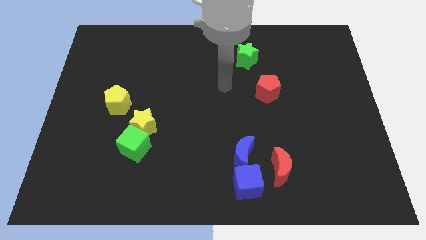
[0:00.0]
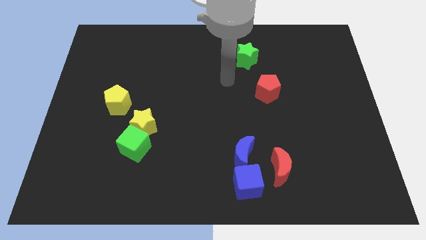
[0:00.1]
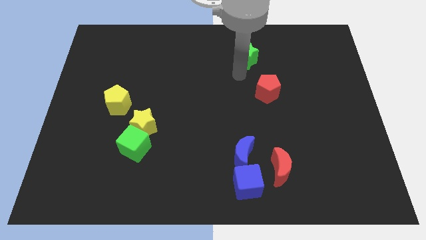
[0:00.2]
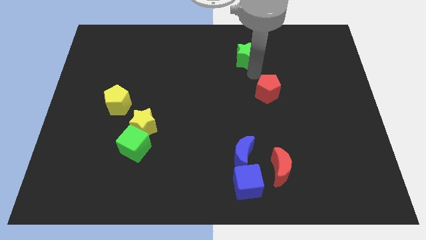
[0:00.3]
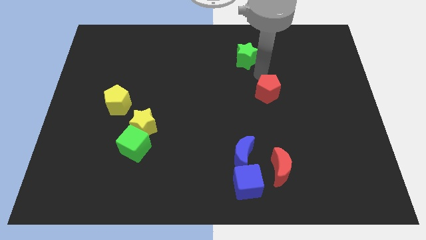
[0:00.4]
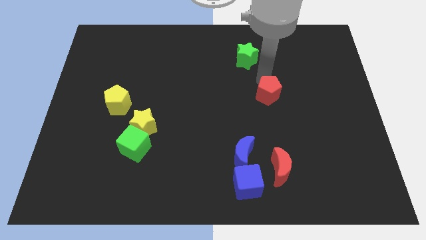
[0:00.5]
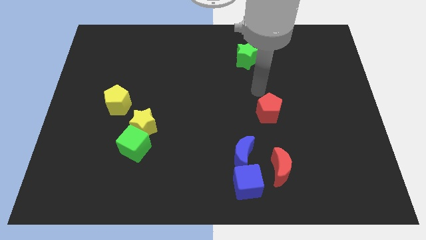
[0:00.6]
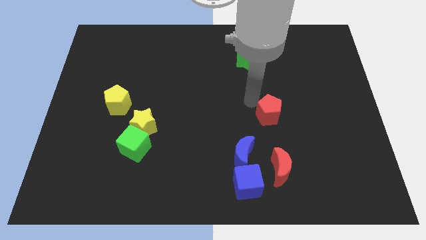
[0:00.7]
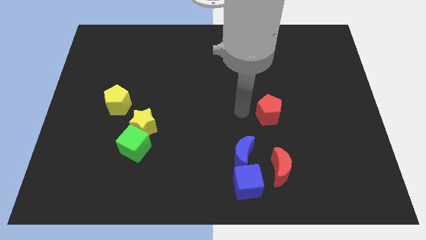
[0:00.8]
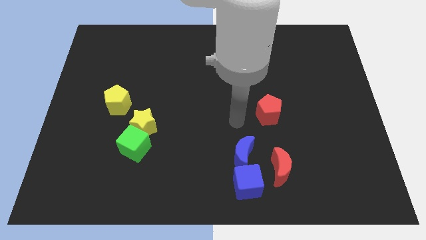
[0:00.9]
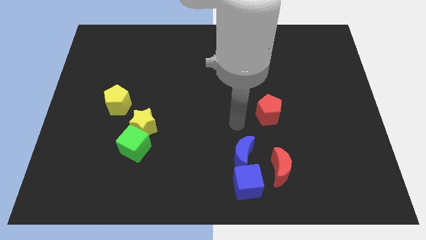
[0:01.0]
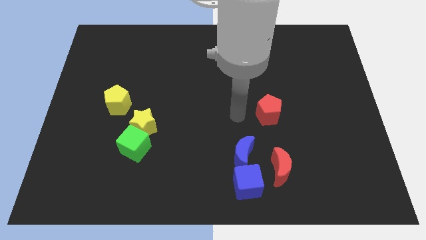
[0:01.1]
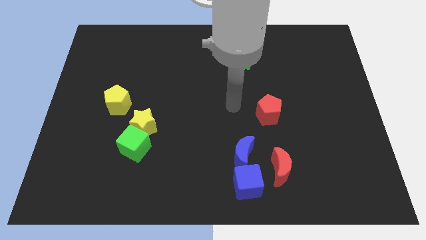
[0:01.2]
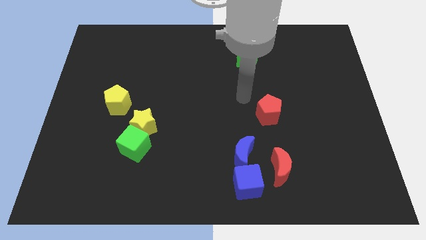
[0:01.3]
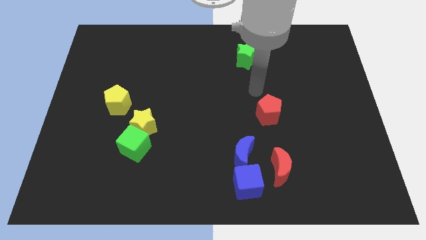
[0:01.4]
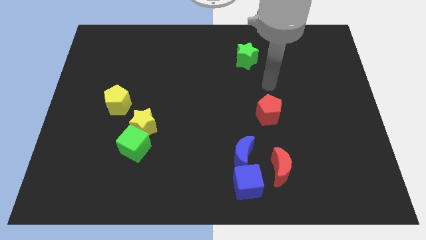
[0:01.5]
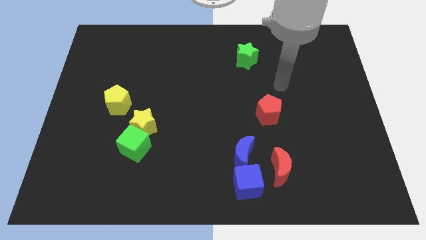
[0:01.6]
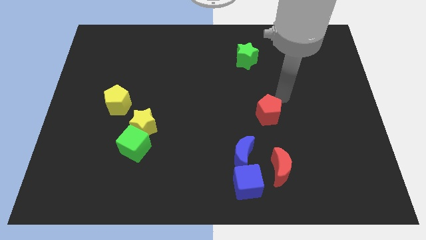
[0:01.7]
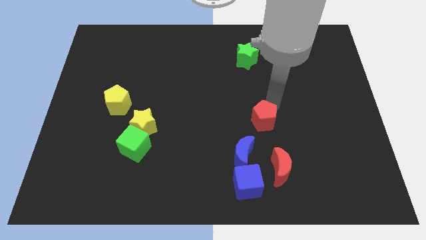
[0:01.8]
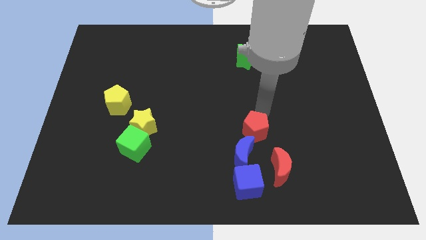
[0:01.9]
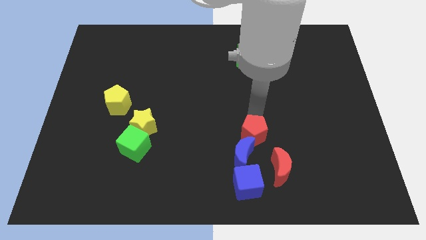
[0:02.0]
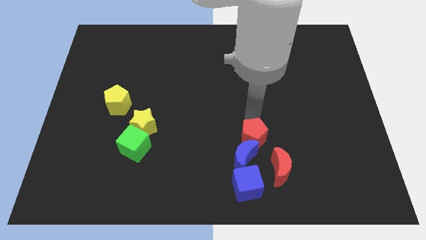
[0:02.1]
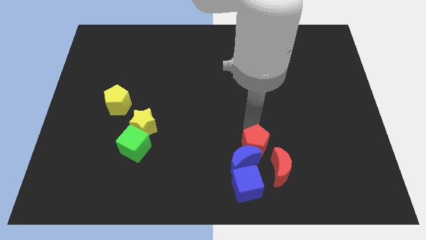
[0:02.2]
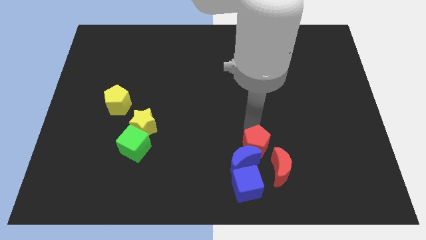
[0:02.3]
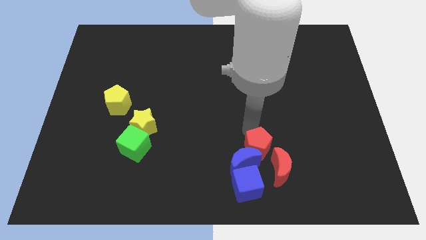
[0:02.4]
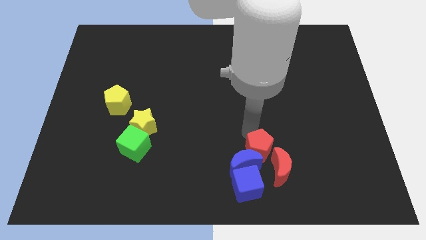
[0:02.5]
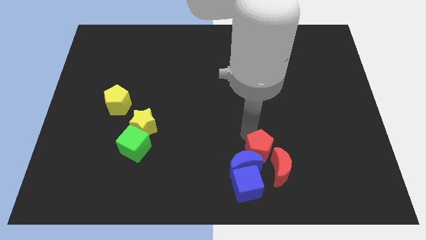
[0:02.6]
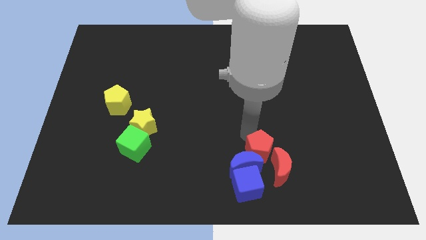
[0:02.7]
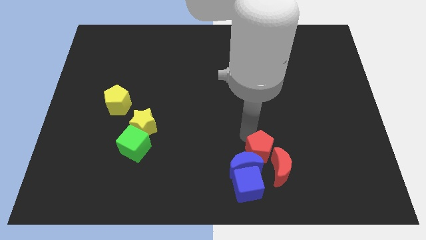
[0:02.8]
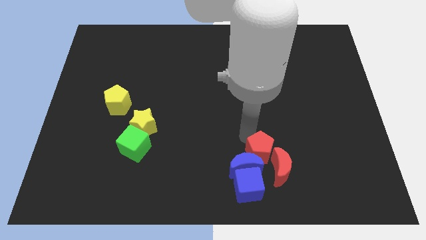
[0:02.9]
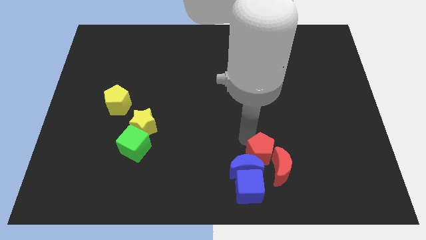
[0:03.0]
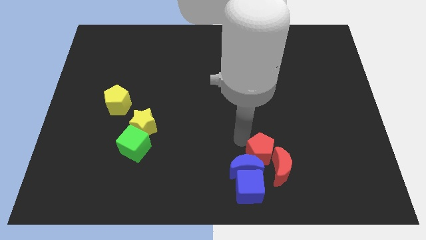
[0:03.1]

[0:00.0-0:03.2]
push the red pentagon into the blue crescent

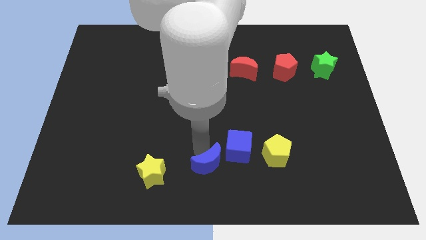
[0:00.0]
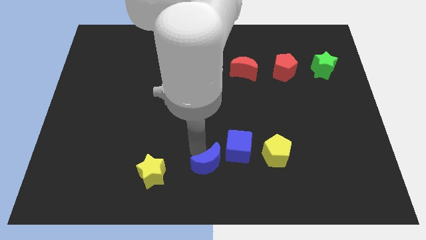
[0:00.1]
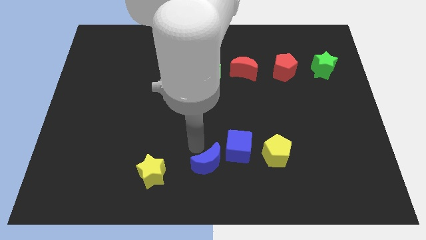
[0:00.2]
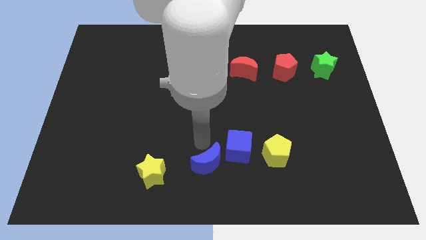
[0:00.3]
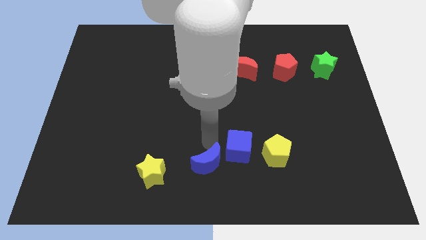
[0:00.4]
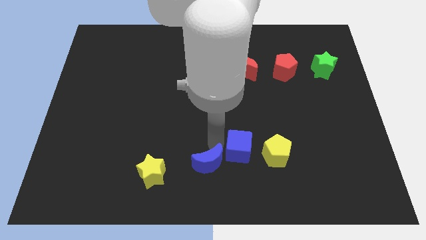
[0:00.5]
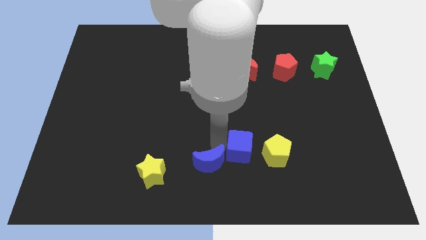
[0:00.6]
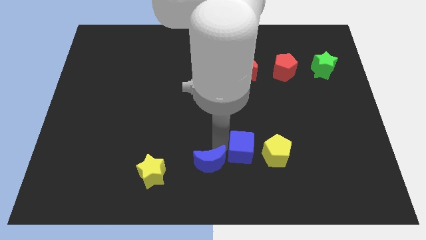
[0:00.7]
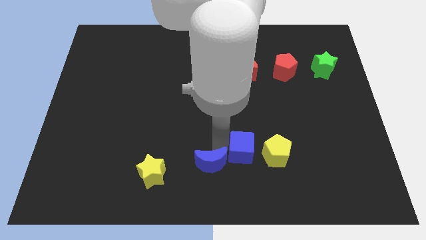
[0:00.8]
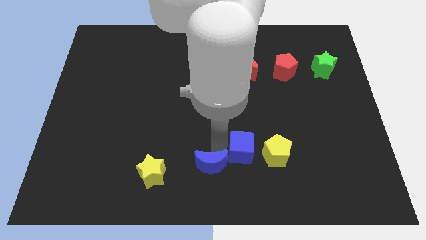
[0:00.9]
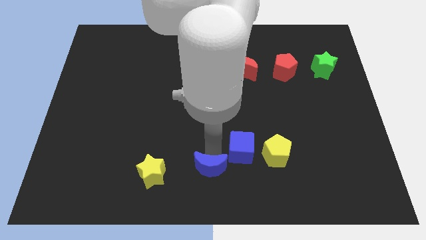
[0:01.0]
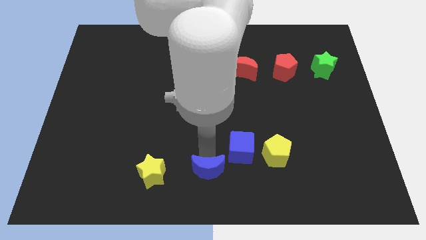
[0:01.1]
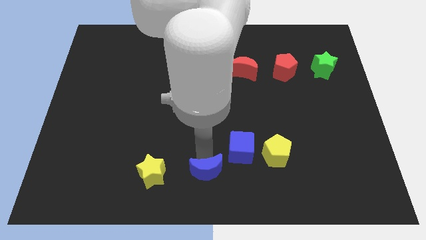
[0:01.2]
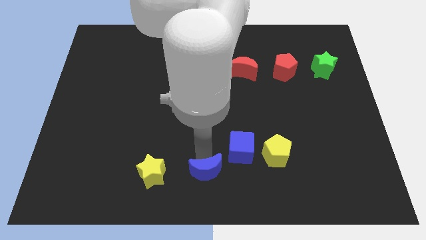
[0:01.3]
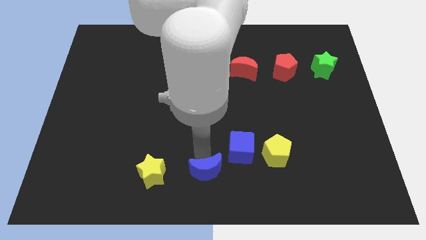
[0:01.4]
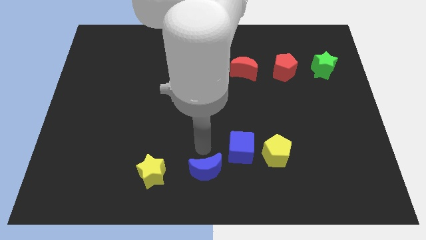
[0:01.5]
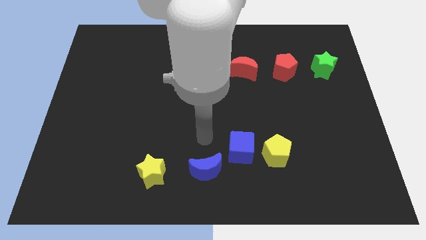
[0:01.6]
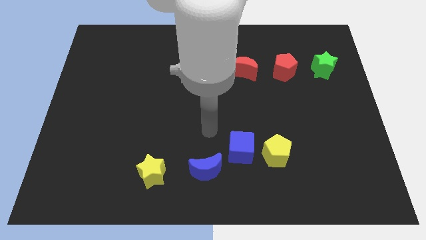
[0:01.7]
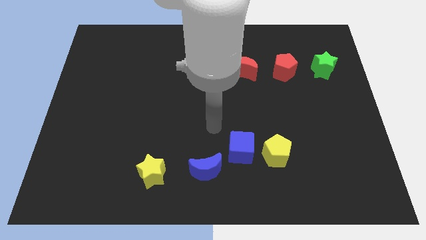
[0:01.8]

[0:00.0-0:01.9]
move the blue moon slightly to the bottom

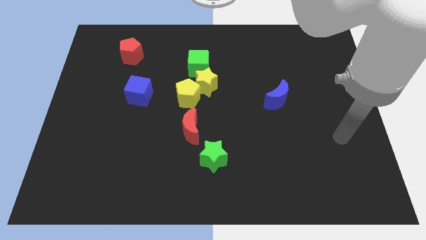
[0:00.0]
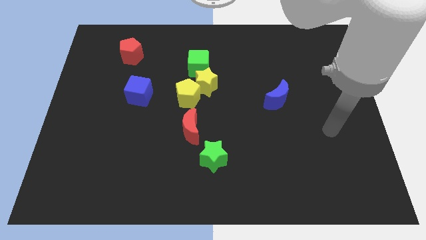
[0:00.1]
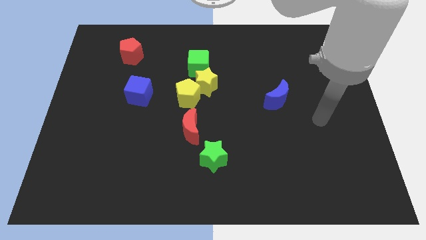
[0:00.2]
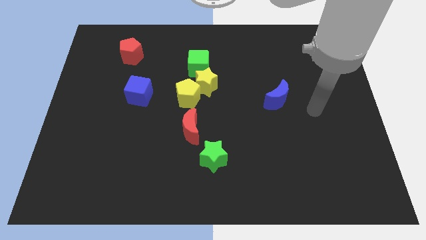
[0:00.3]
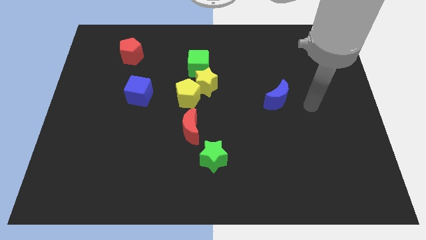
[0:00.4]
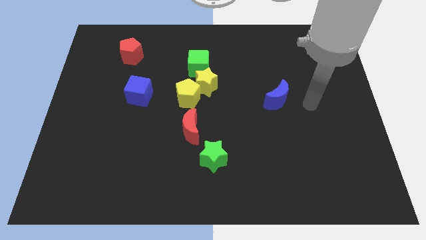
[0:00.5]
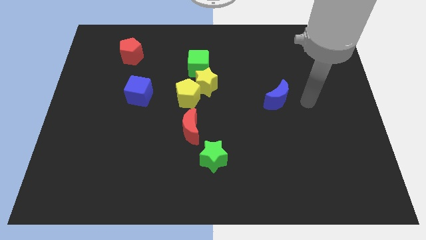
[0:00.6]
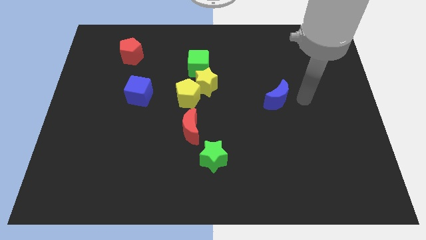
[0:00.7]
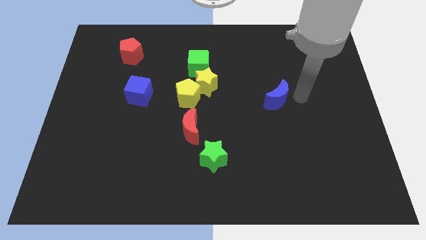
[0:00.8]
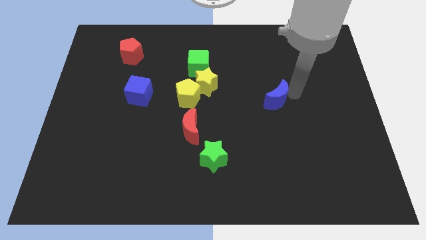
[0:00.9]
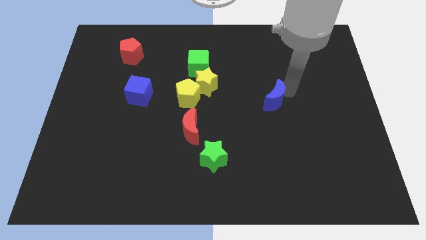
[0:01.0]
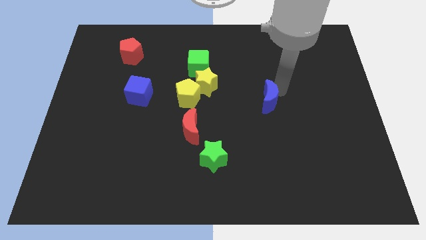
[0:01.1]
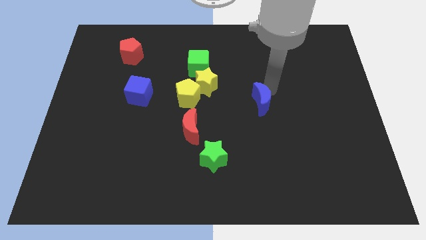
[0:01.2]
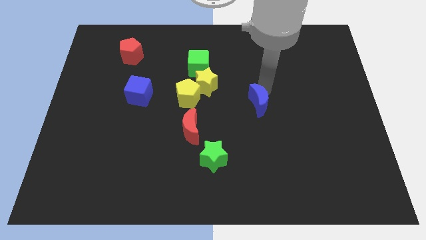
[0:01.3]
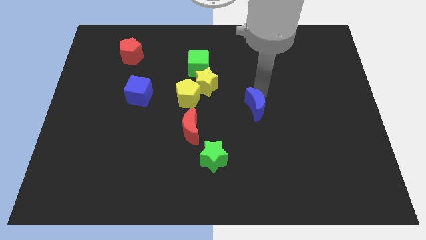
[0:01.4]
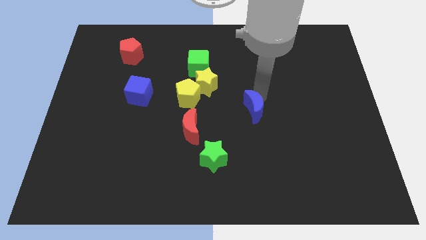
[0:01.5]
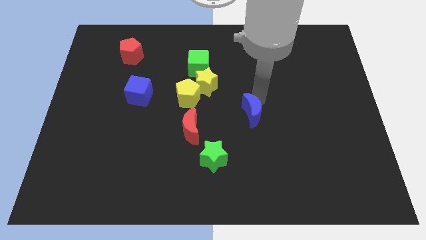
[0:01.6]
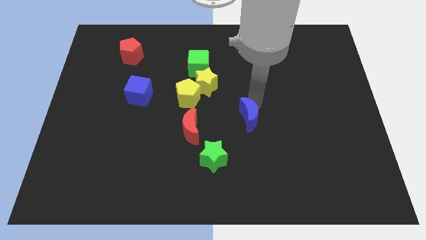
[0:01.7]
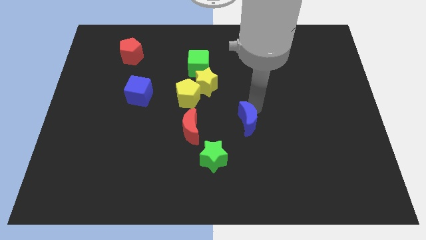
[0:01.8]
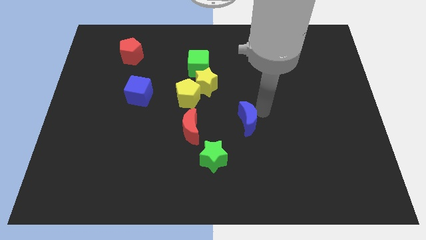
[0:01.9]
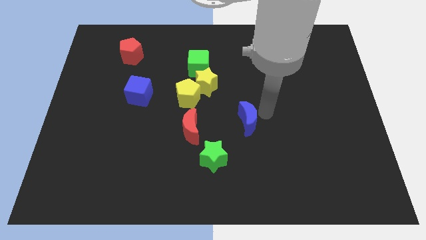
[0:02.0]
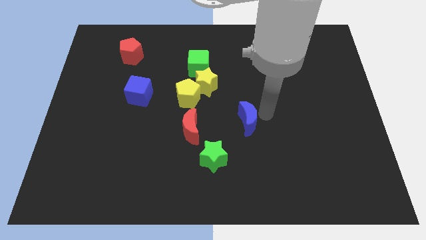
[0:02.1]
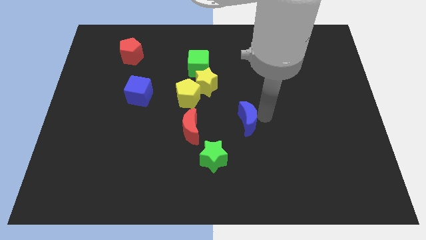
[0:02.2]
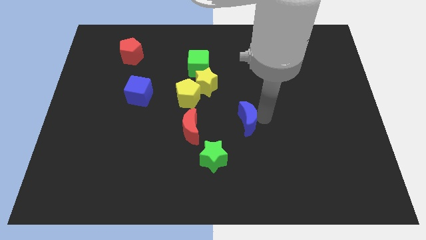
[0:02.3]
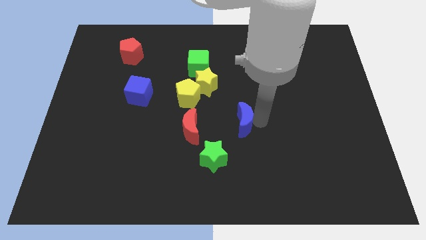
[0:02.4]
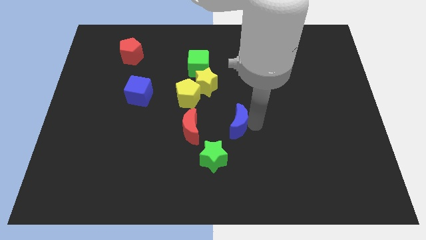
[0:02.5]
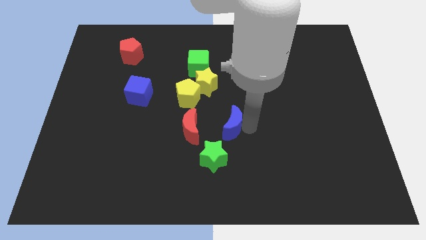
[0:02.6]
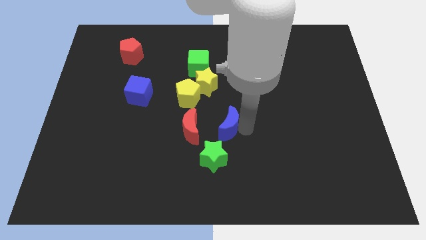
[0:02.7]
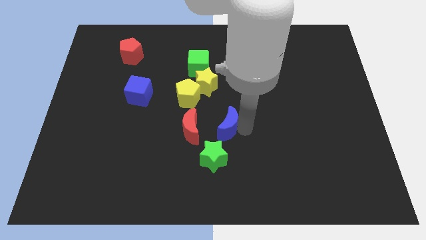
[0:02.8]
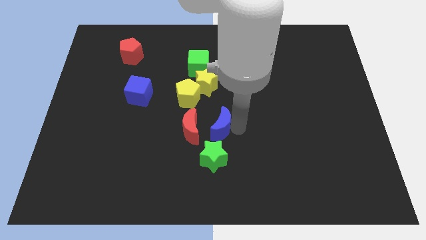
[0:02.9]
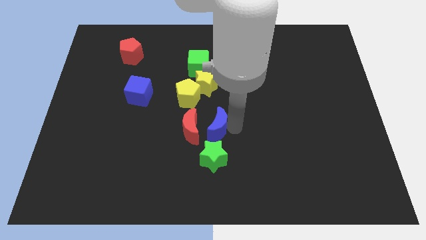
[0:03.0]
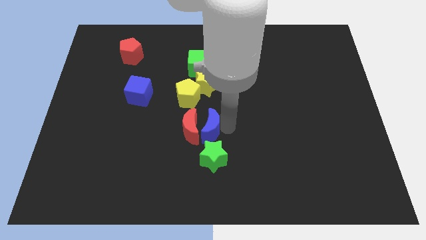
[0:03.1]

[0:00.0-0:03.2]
place the blue moon right to the red moon

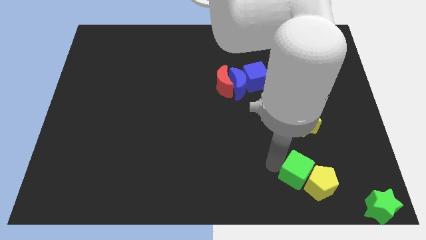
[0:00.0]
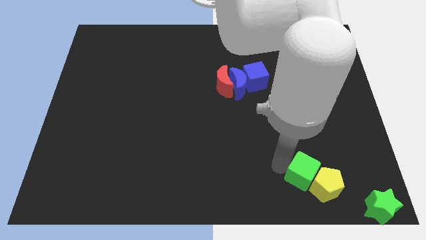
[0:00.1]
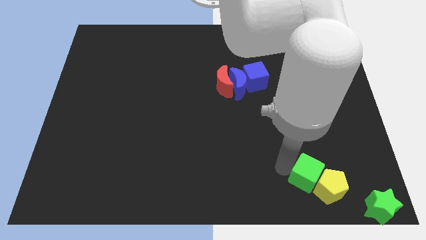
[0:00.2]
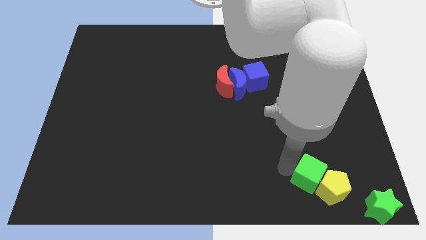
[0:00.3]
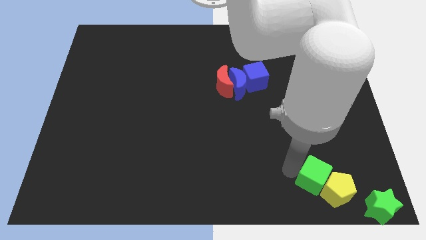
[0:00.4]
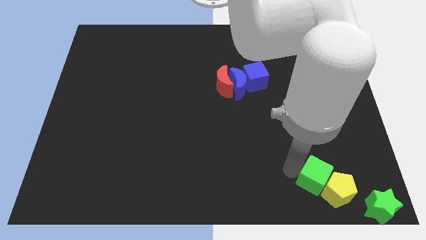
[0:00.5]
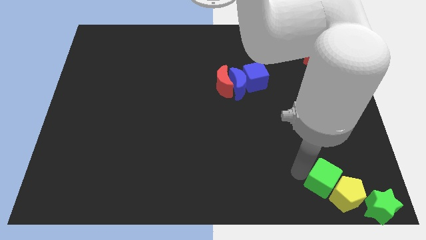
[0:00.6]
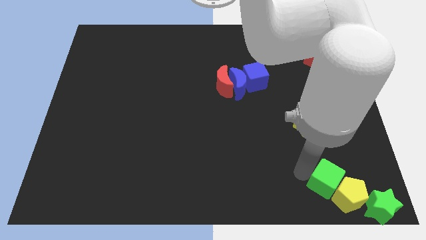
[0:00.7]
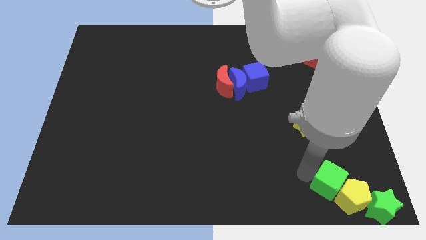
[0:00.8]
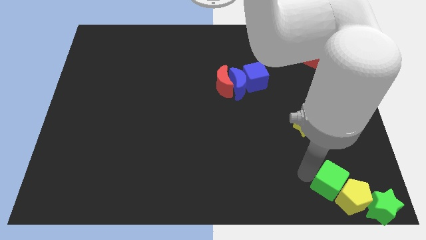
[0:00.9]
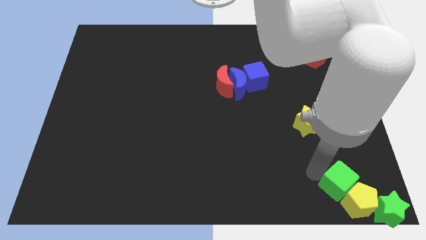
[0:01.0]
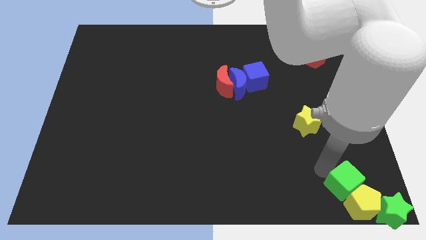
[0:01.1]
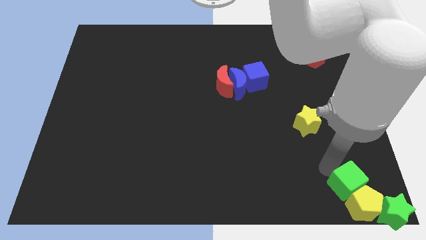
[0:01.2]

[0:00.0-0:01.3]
move the green cube along with the yellow pentagon into the green star
